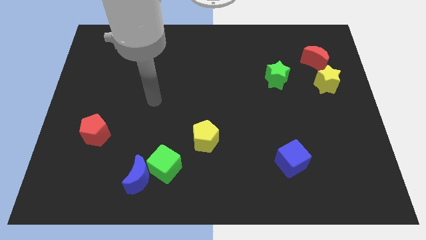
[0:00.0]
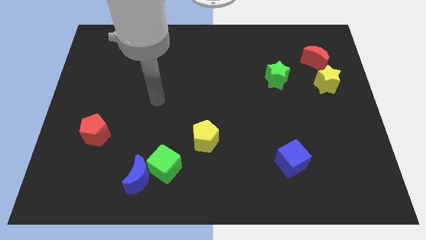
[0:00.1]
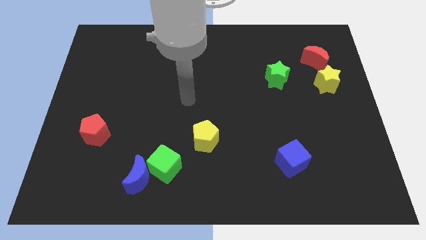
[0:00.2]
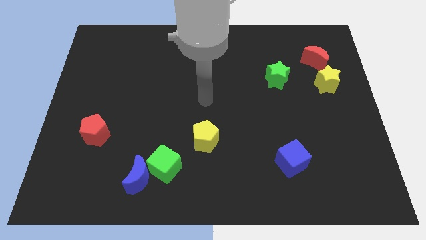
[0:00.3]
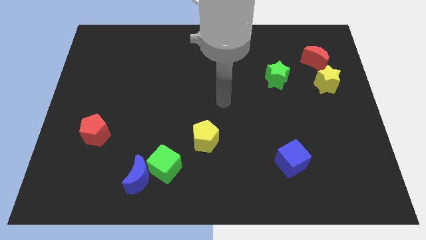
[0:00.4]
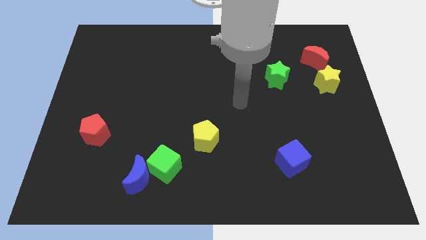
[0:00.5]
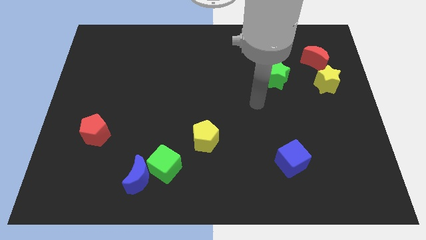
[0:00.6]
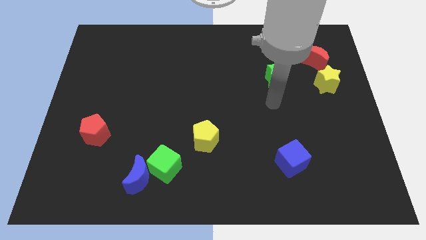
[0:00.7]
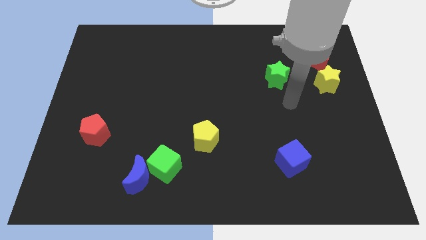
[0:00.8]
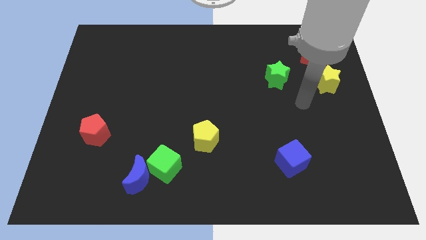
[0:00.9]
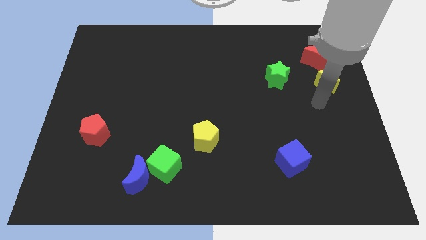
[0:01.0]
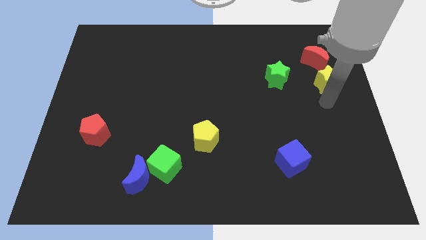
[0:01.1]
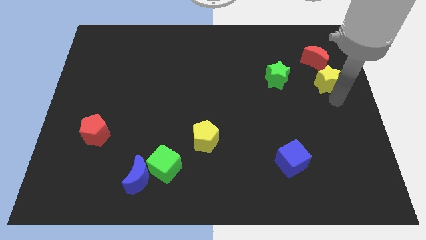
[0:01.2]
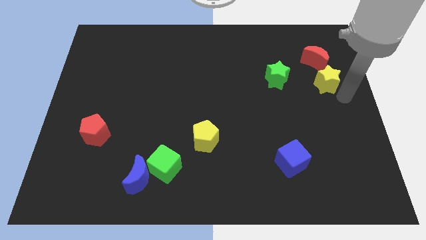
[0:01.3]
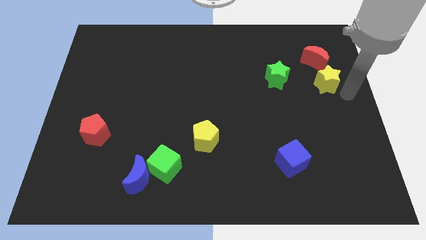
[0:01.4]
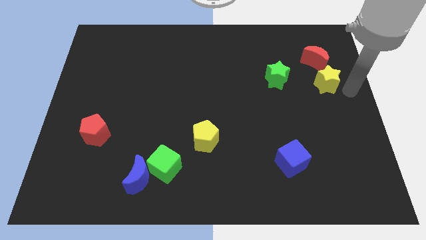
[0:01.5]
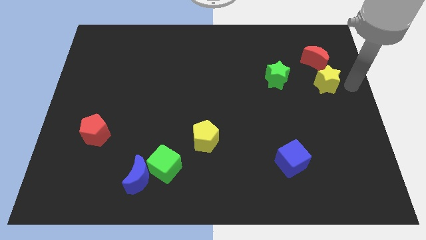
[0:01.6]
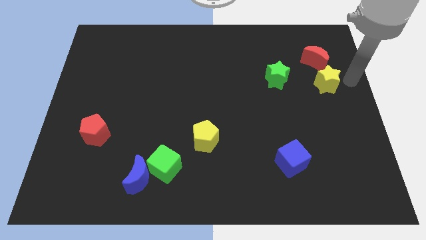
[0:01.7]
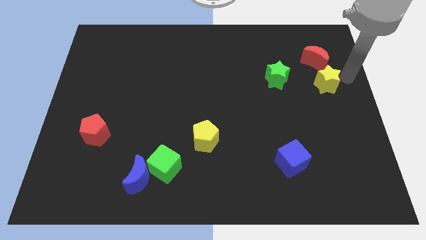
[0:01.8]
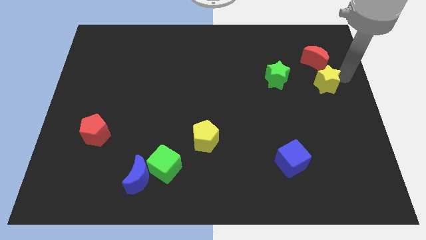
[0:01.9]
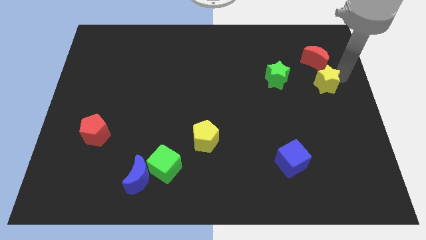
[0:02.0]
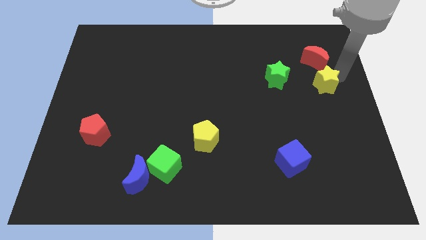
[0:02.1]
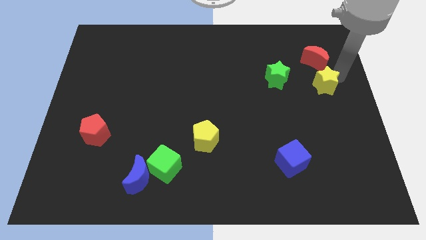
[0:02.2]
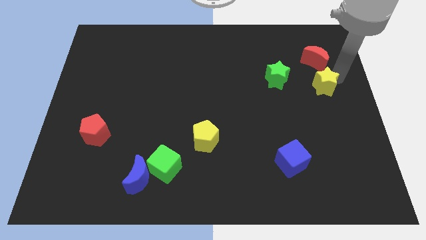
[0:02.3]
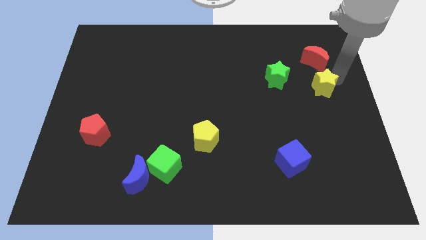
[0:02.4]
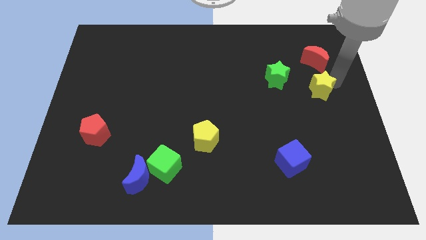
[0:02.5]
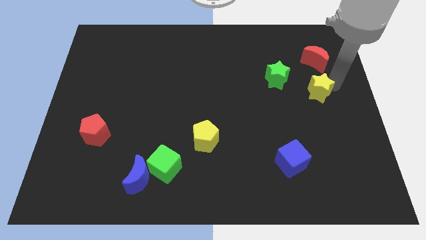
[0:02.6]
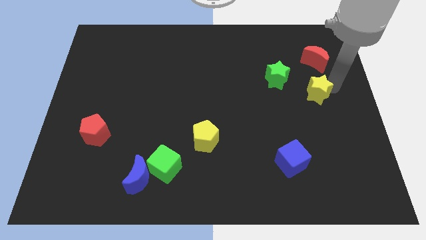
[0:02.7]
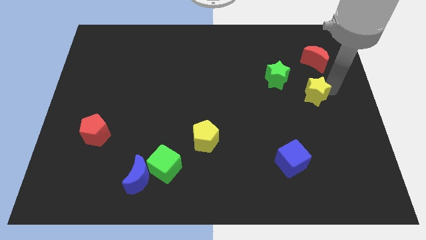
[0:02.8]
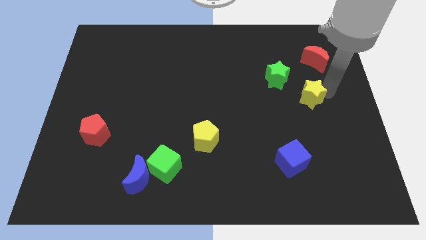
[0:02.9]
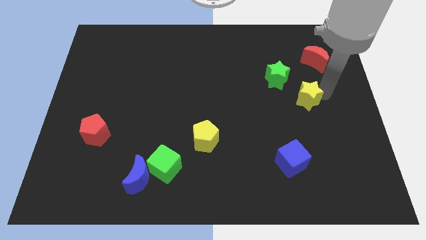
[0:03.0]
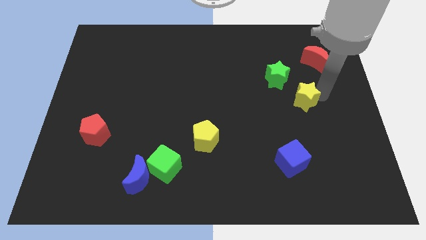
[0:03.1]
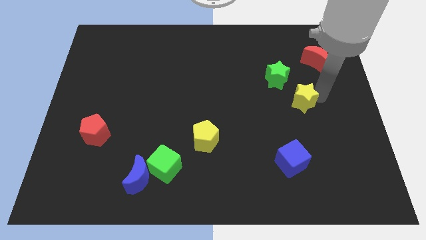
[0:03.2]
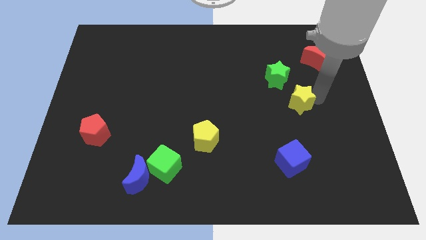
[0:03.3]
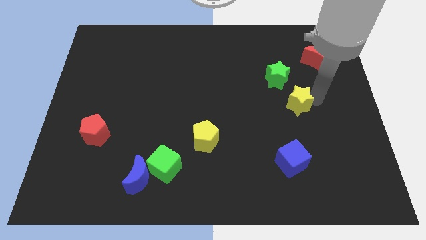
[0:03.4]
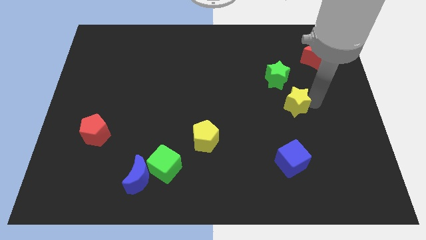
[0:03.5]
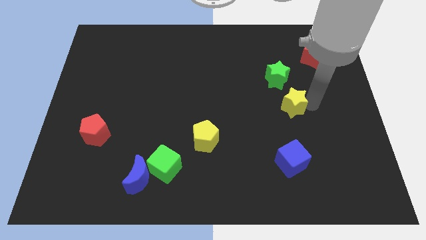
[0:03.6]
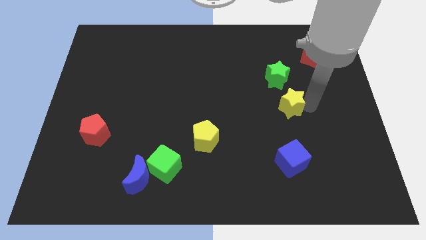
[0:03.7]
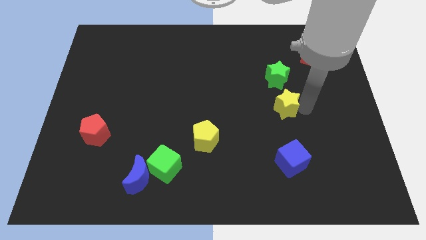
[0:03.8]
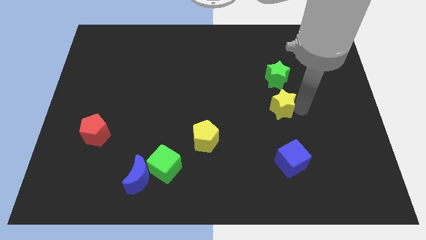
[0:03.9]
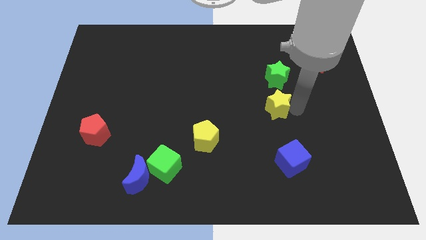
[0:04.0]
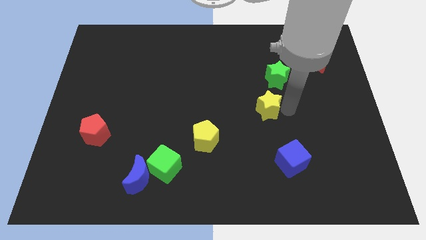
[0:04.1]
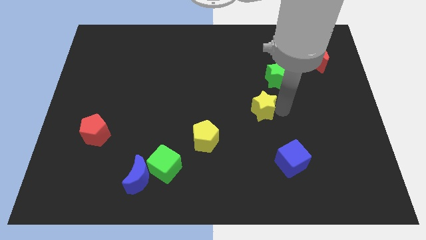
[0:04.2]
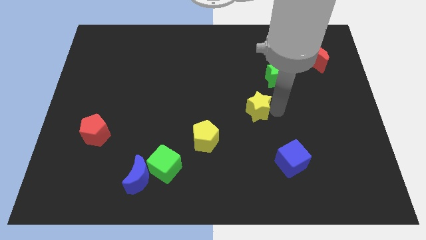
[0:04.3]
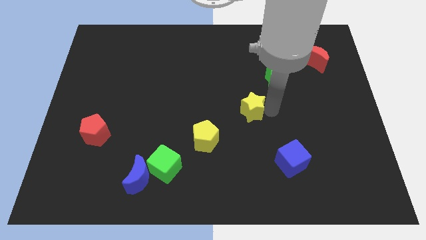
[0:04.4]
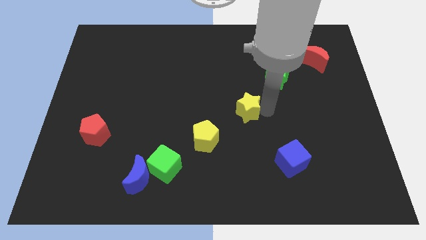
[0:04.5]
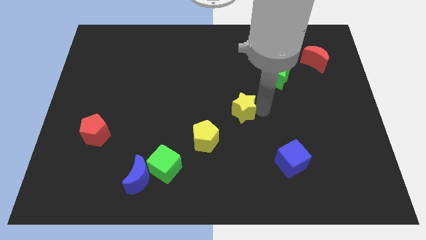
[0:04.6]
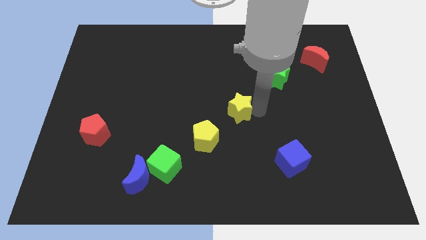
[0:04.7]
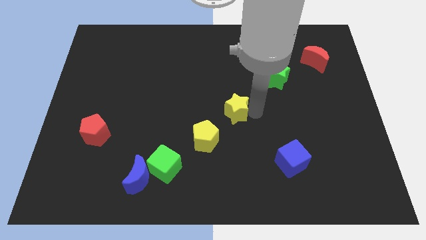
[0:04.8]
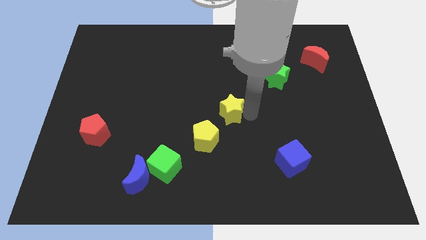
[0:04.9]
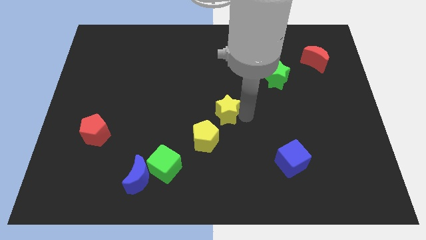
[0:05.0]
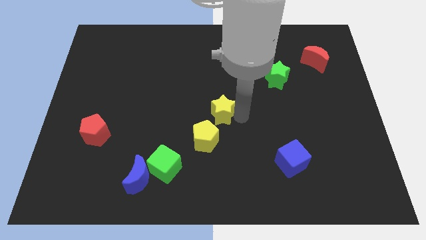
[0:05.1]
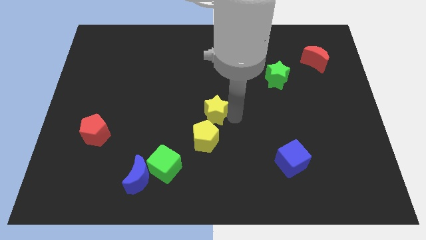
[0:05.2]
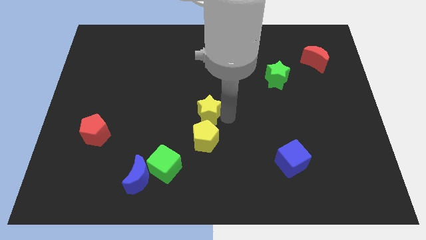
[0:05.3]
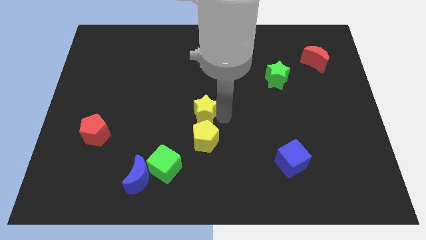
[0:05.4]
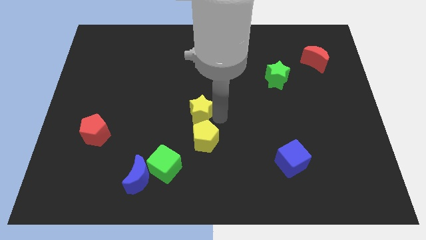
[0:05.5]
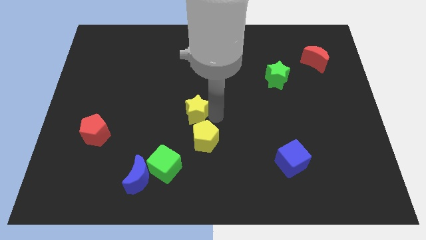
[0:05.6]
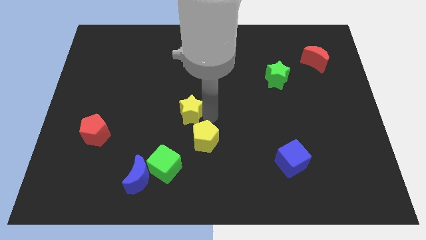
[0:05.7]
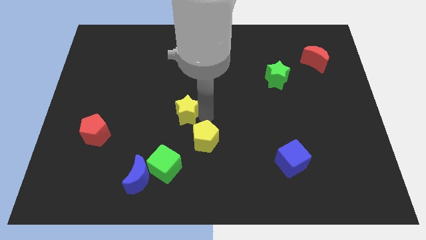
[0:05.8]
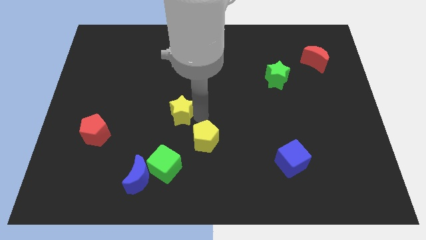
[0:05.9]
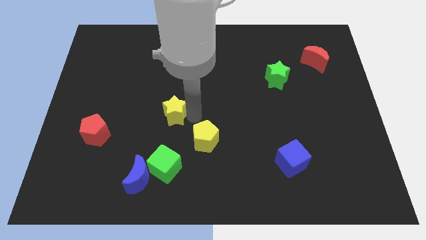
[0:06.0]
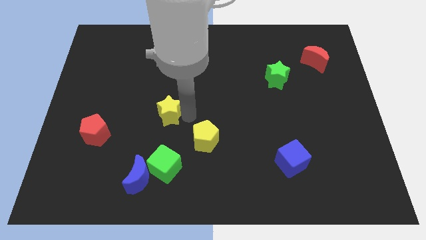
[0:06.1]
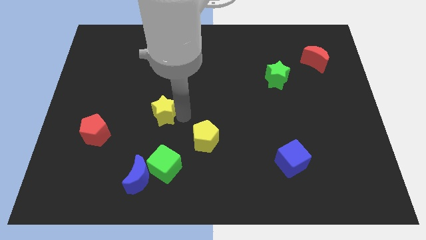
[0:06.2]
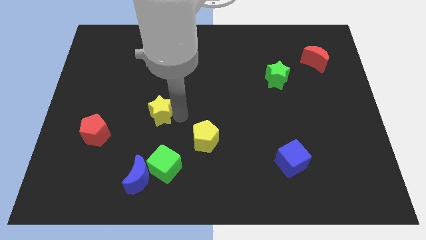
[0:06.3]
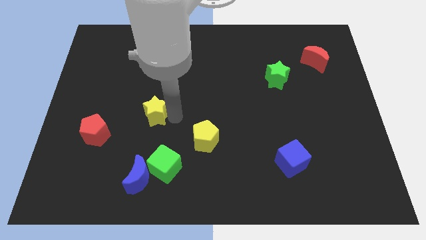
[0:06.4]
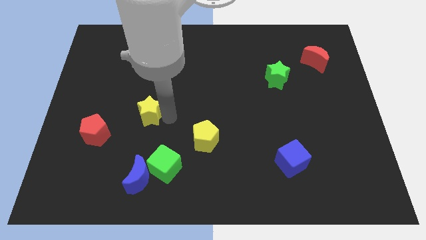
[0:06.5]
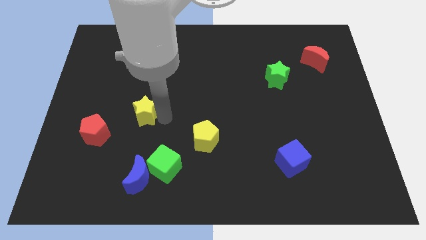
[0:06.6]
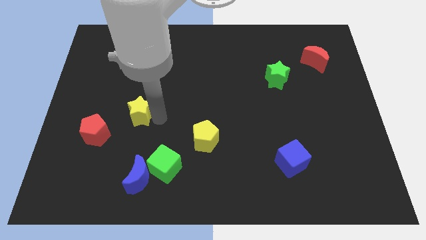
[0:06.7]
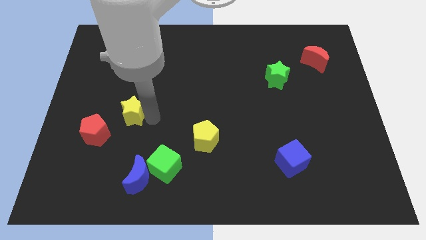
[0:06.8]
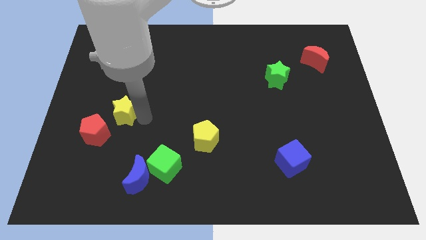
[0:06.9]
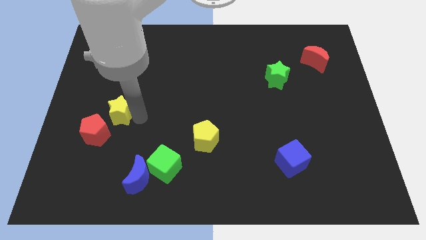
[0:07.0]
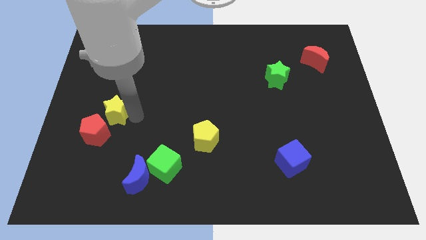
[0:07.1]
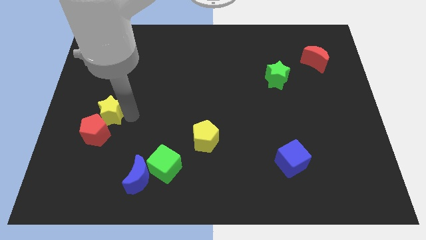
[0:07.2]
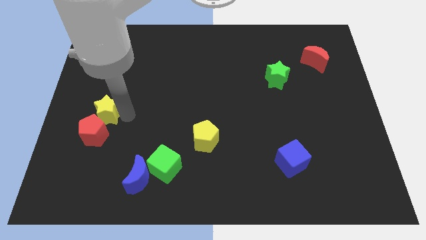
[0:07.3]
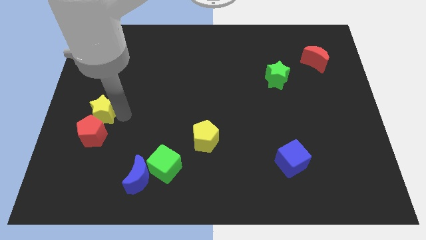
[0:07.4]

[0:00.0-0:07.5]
put the yellow star towards the red pentagon

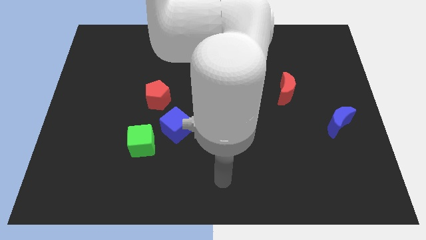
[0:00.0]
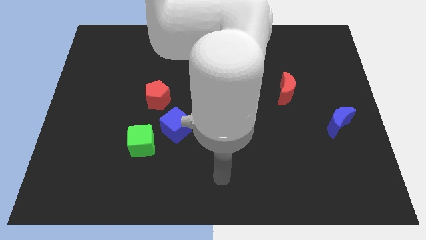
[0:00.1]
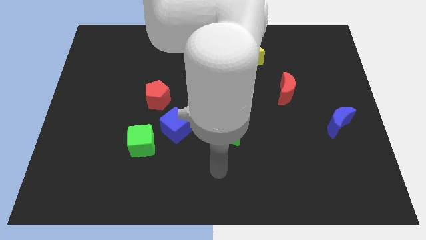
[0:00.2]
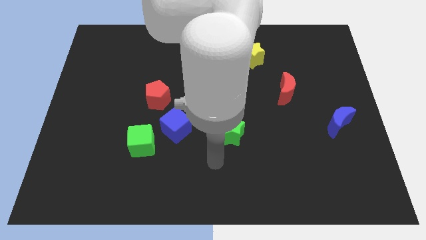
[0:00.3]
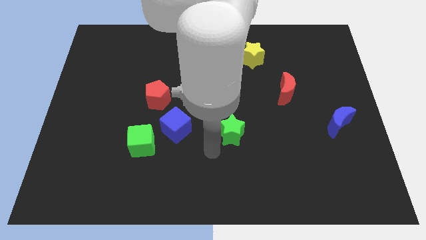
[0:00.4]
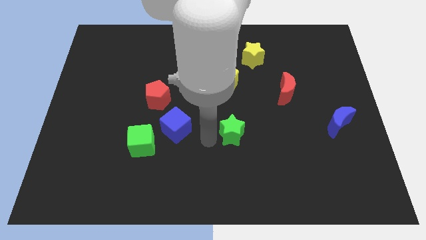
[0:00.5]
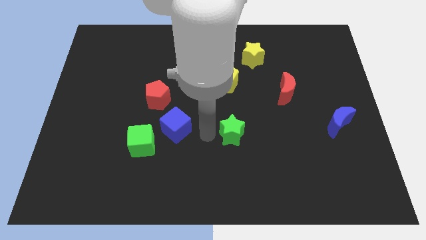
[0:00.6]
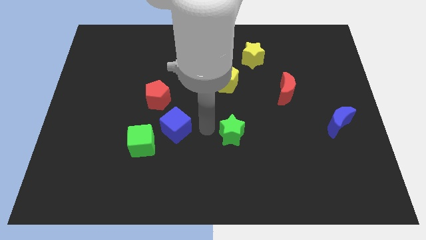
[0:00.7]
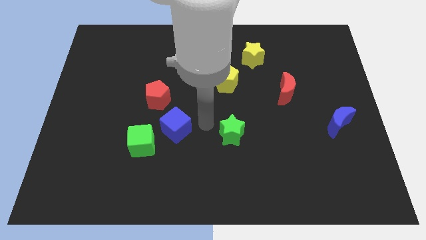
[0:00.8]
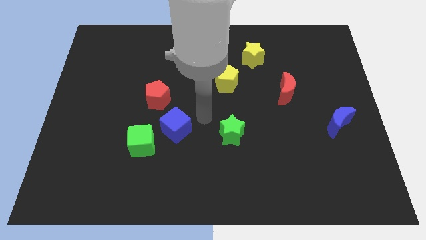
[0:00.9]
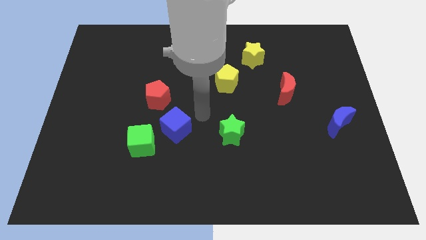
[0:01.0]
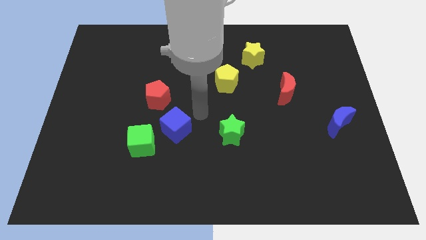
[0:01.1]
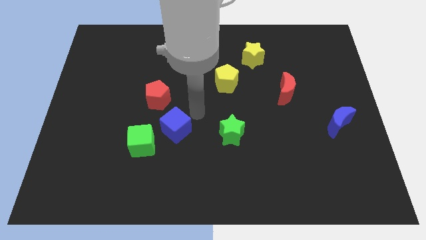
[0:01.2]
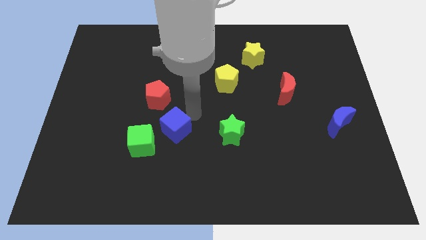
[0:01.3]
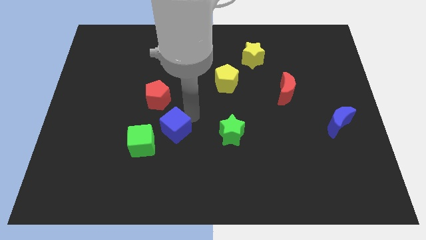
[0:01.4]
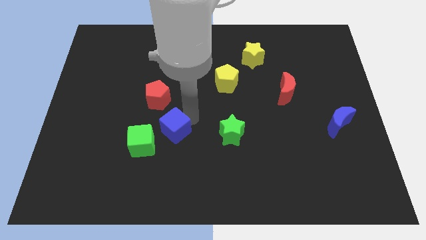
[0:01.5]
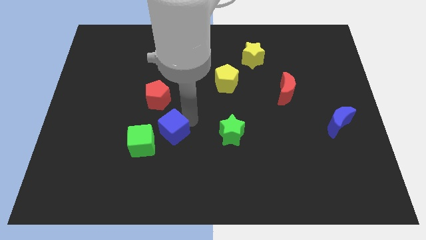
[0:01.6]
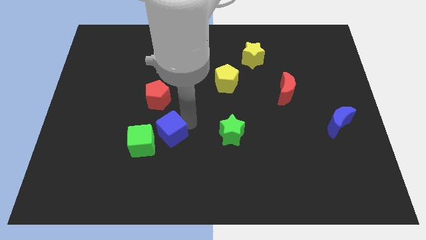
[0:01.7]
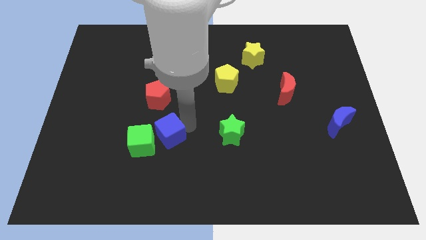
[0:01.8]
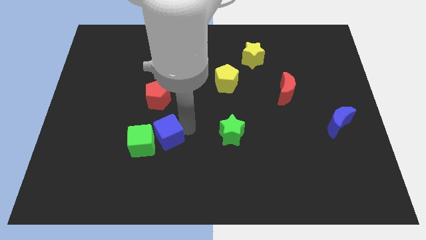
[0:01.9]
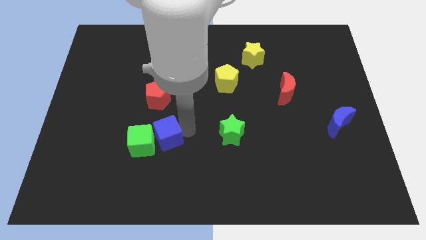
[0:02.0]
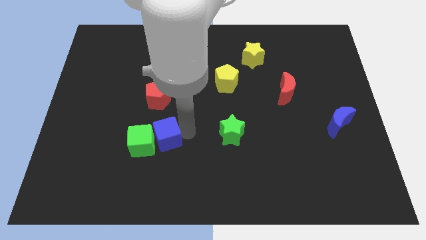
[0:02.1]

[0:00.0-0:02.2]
put the blue cube close to the green cube
